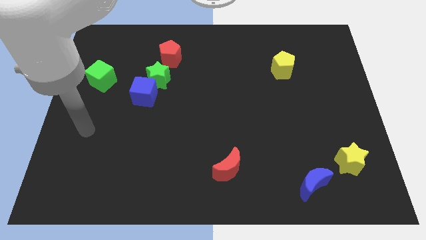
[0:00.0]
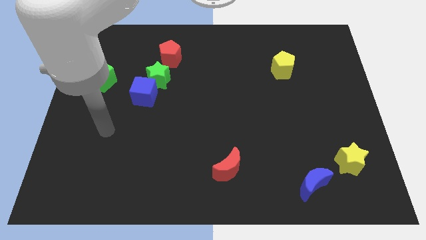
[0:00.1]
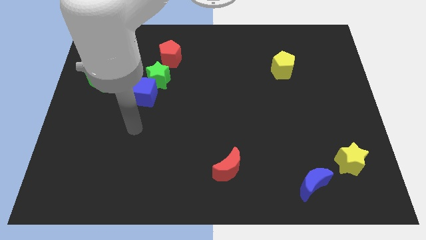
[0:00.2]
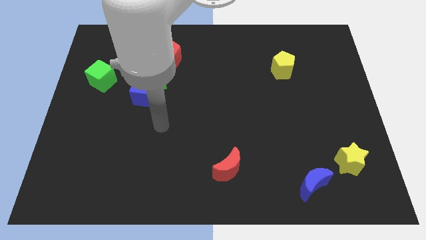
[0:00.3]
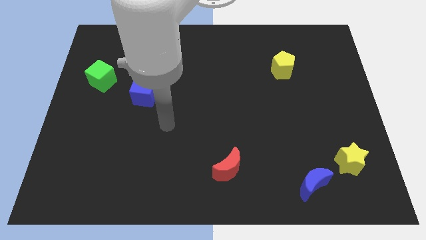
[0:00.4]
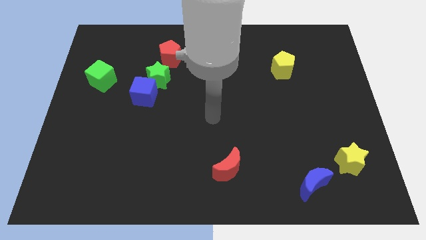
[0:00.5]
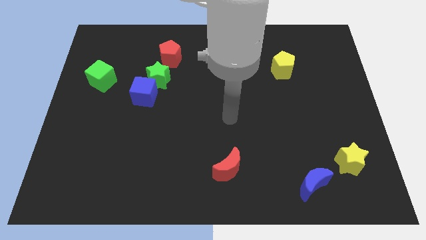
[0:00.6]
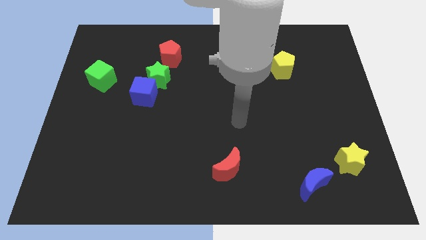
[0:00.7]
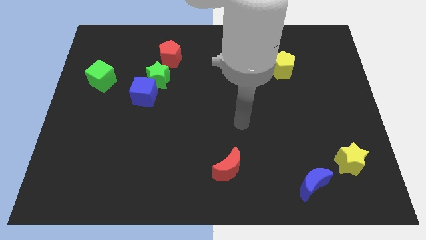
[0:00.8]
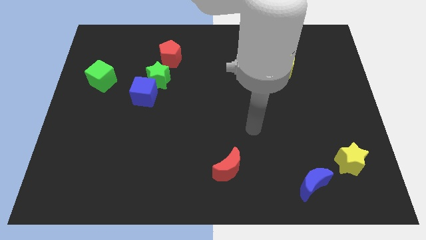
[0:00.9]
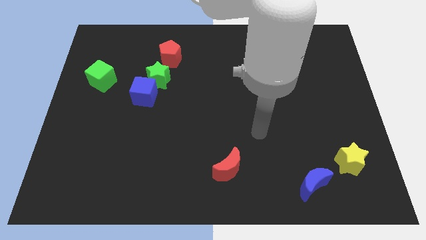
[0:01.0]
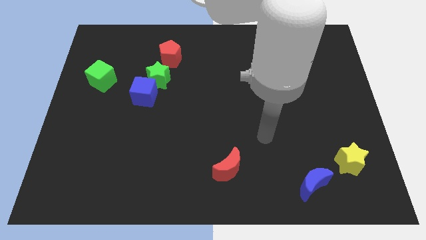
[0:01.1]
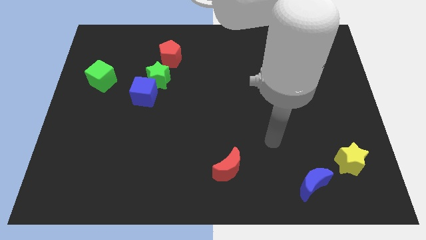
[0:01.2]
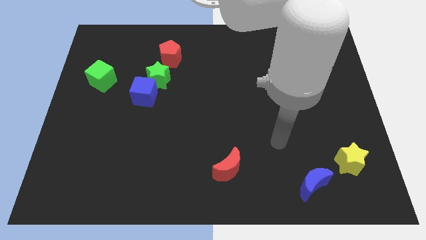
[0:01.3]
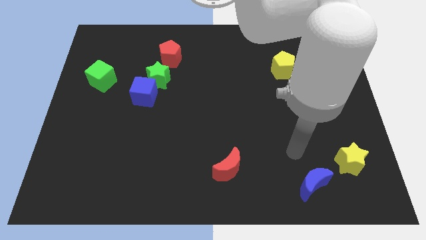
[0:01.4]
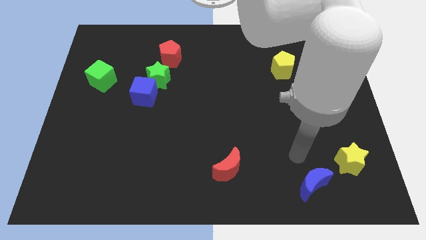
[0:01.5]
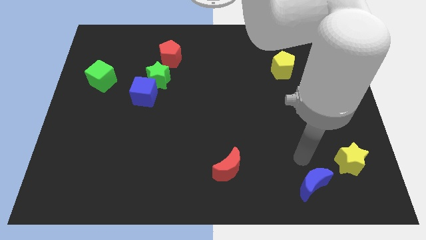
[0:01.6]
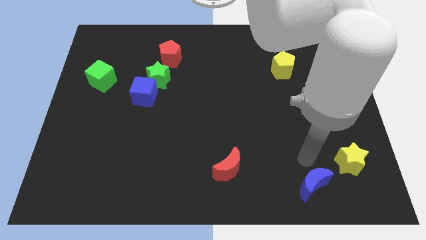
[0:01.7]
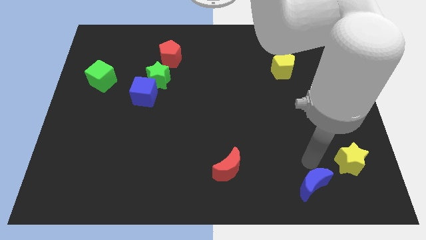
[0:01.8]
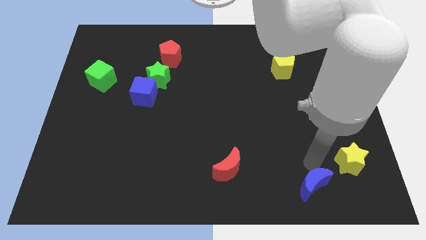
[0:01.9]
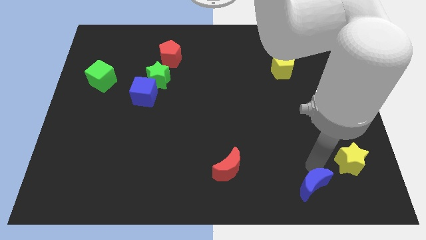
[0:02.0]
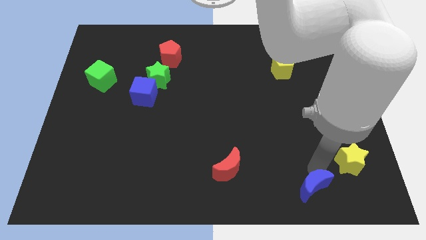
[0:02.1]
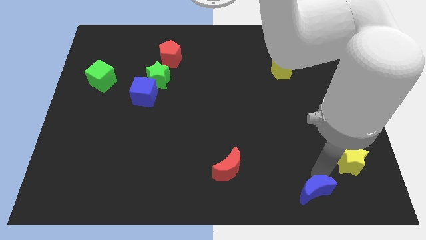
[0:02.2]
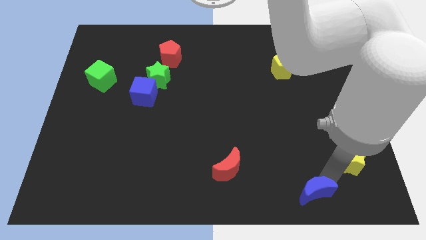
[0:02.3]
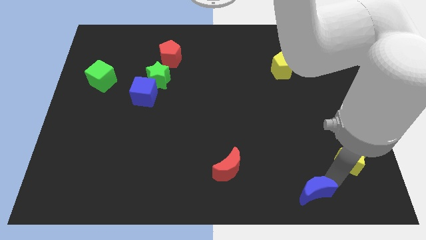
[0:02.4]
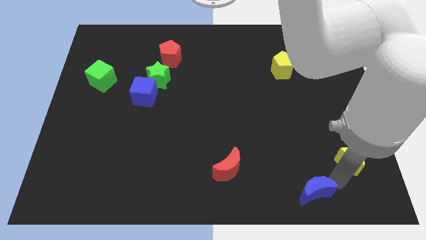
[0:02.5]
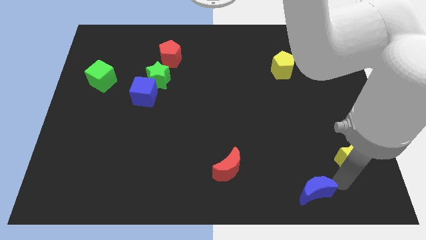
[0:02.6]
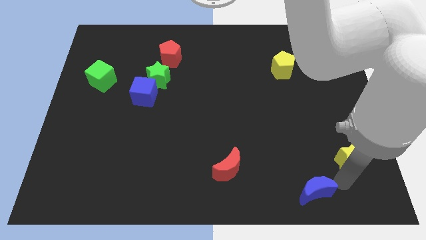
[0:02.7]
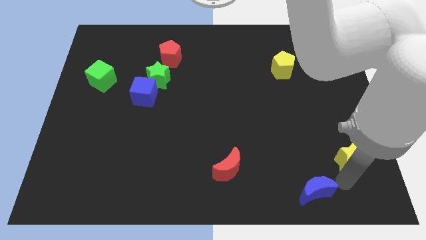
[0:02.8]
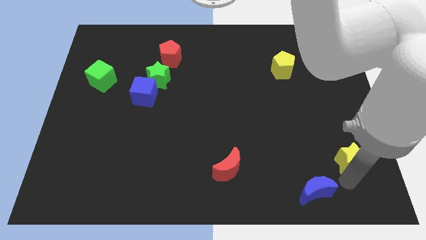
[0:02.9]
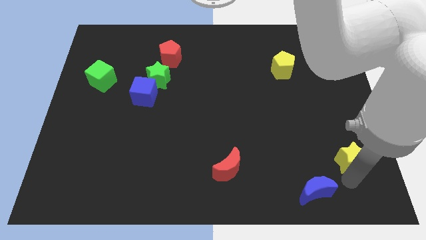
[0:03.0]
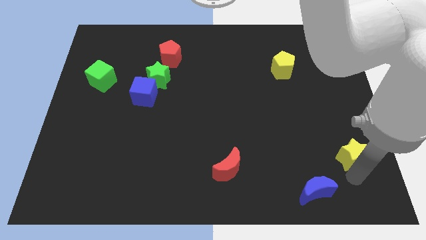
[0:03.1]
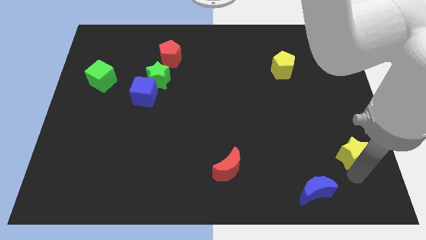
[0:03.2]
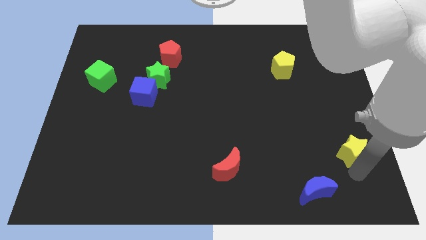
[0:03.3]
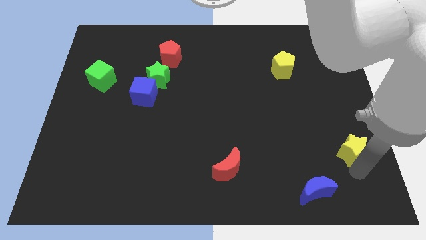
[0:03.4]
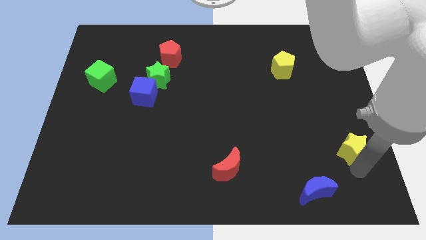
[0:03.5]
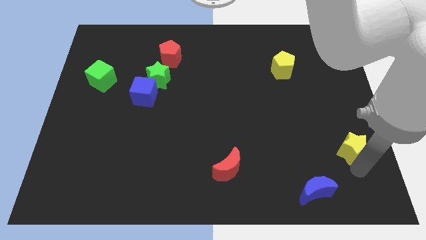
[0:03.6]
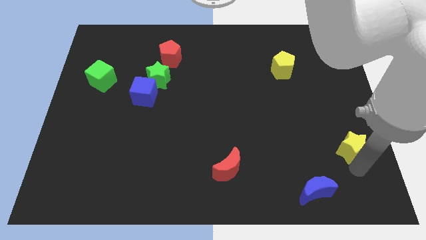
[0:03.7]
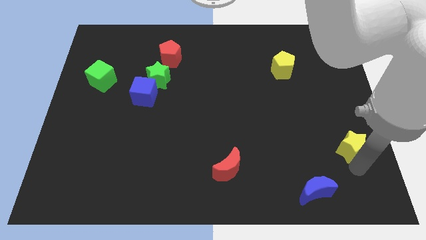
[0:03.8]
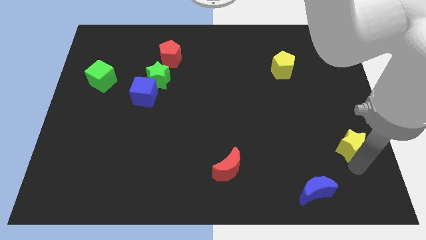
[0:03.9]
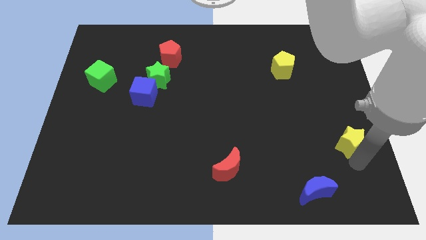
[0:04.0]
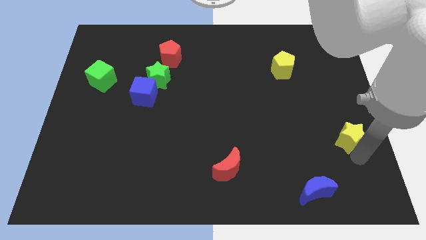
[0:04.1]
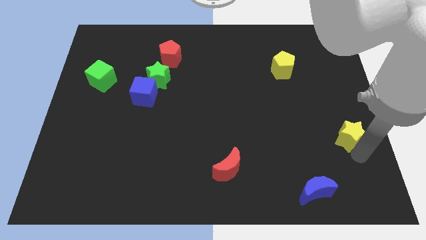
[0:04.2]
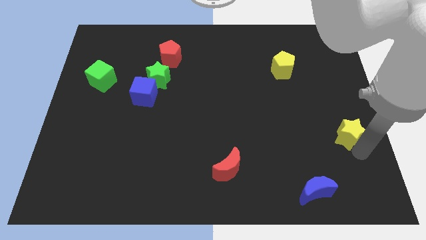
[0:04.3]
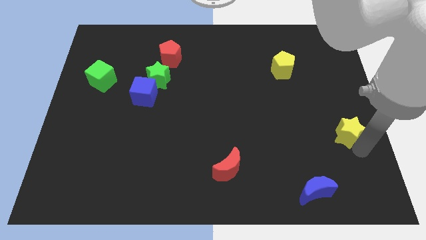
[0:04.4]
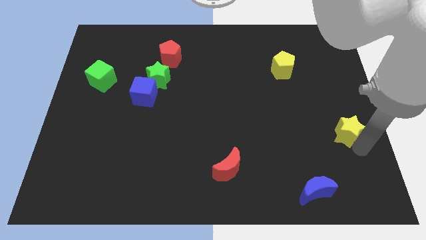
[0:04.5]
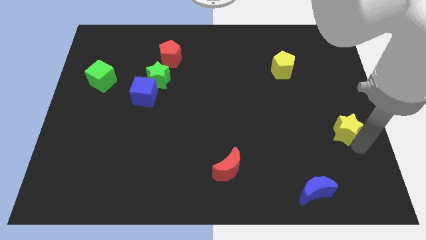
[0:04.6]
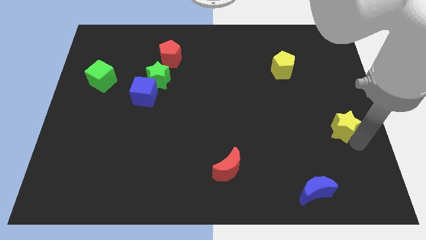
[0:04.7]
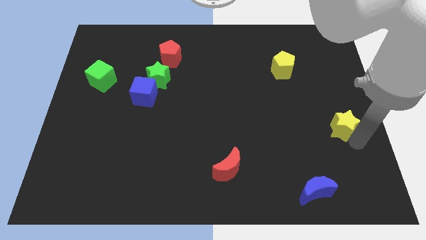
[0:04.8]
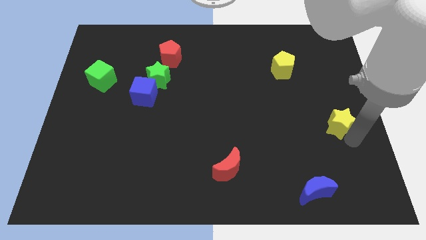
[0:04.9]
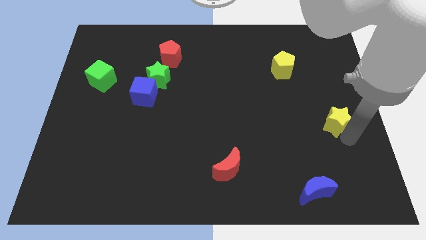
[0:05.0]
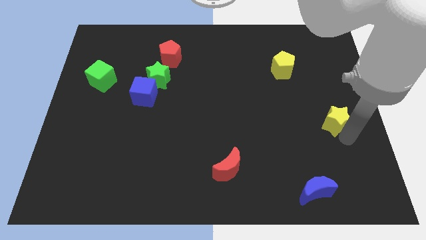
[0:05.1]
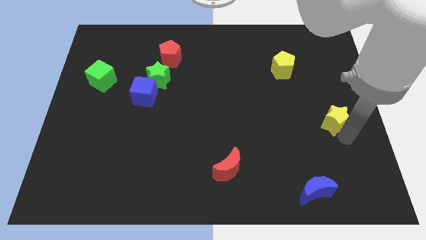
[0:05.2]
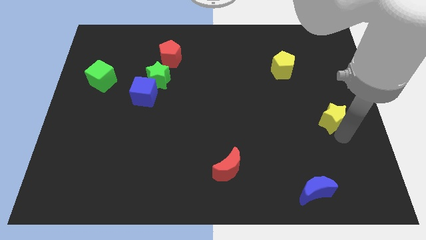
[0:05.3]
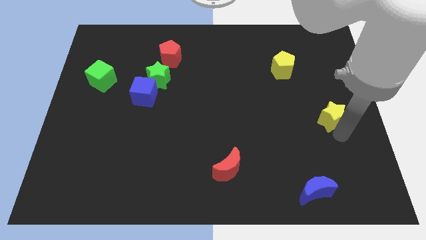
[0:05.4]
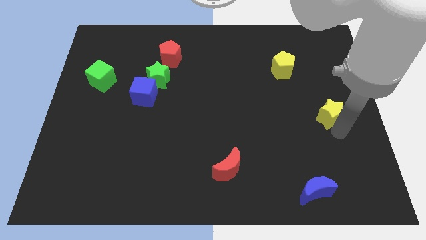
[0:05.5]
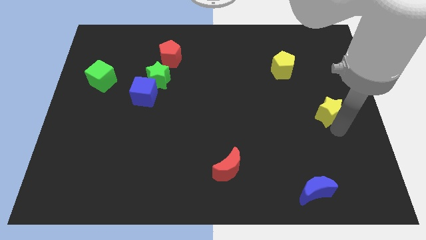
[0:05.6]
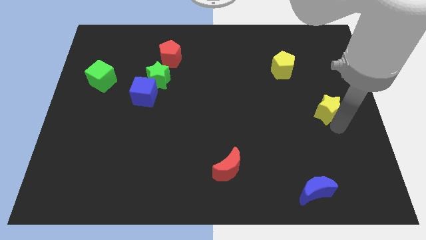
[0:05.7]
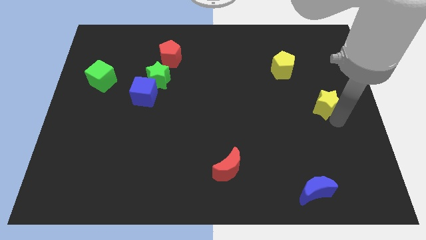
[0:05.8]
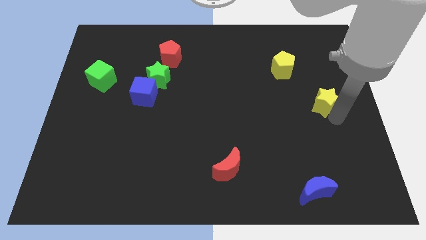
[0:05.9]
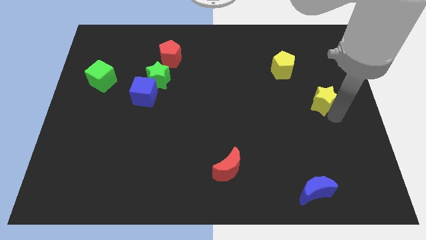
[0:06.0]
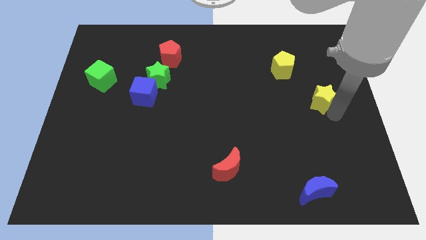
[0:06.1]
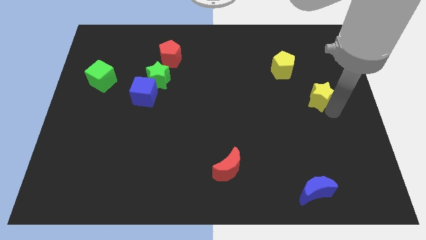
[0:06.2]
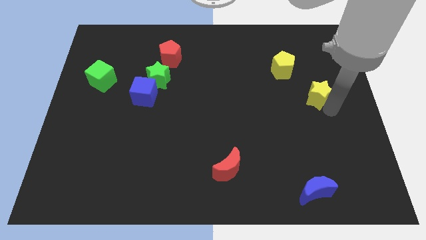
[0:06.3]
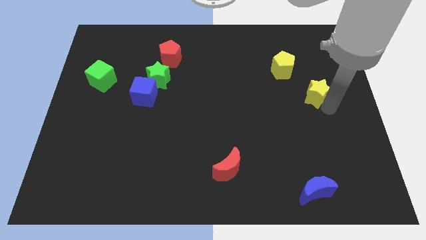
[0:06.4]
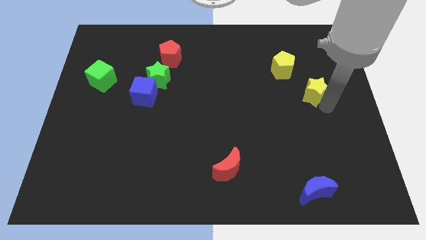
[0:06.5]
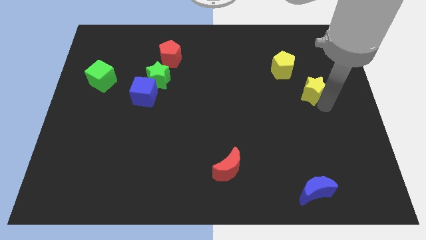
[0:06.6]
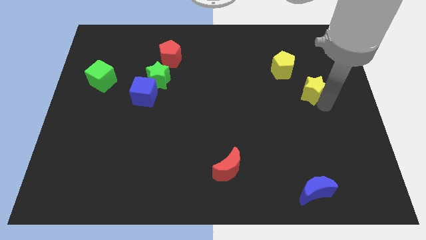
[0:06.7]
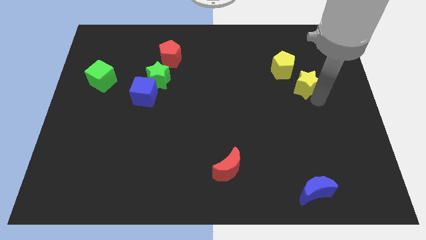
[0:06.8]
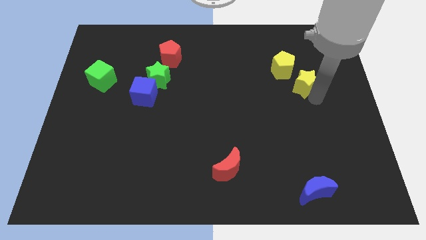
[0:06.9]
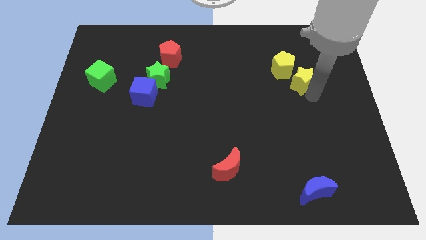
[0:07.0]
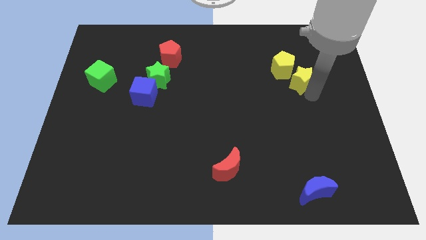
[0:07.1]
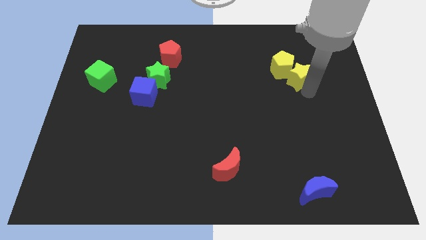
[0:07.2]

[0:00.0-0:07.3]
push the yellow star next to the yellow pentagon

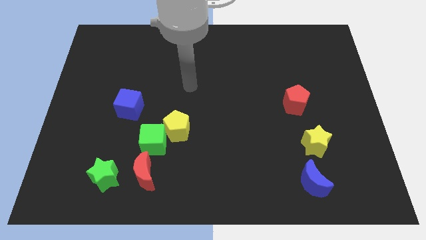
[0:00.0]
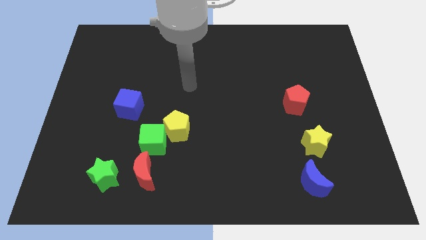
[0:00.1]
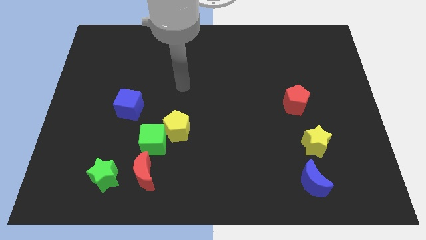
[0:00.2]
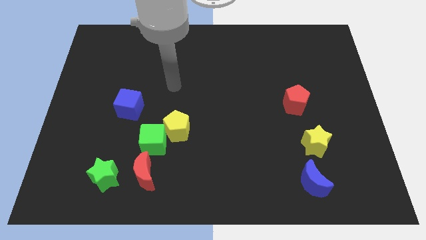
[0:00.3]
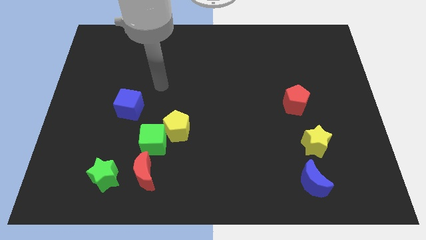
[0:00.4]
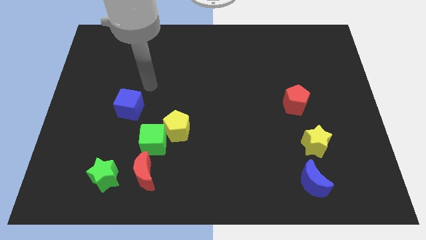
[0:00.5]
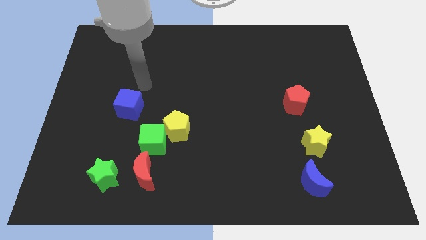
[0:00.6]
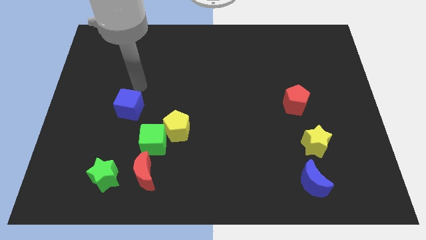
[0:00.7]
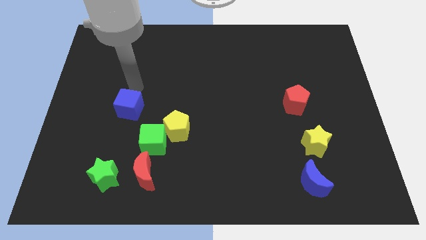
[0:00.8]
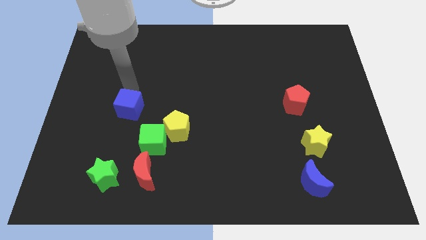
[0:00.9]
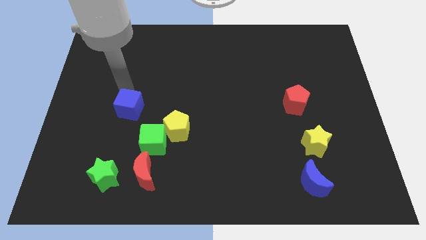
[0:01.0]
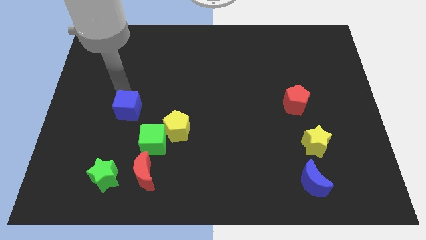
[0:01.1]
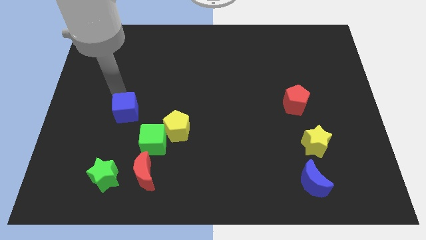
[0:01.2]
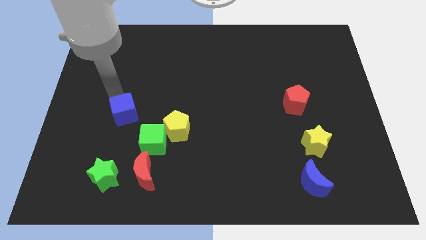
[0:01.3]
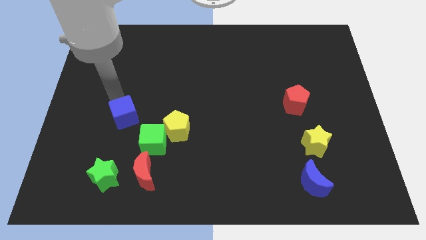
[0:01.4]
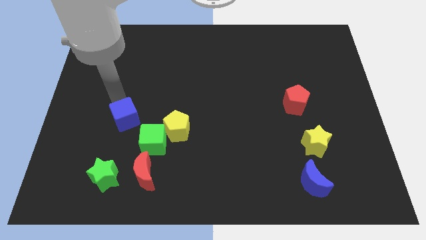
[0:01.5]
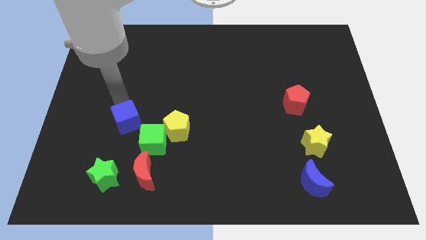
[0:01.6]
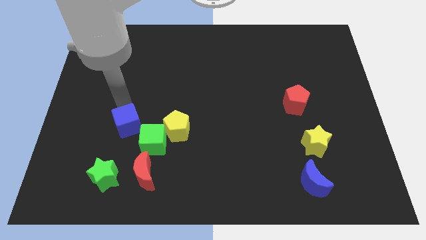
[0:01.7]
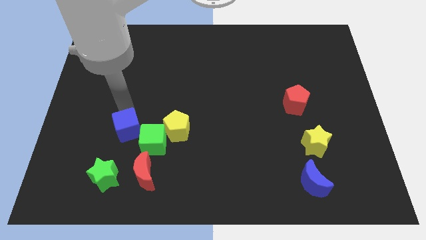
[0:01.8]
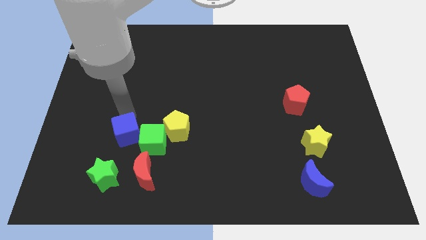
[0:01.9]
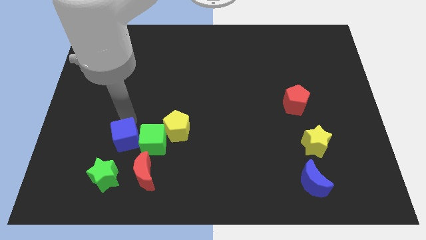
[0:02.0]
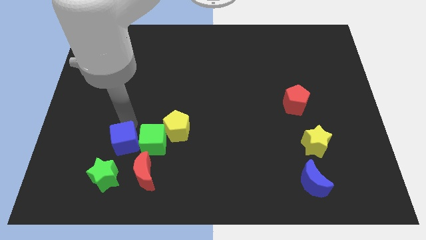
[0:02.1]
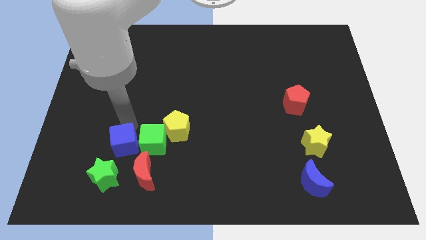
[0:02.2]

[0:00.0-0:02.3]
push the blue cube close to the green cube
